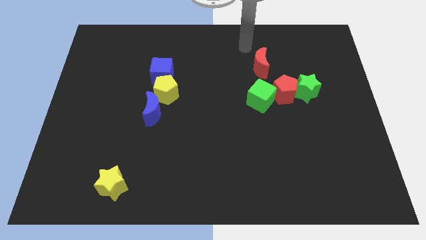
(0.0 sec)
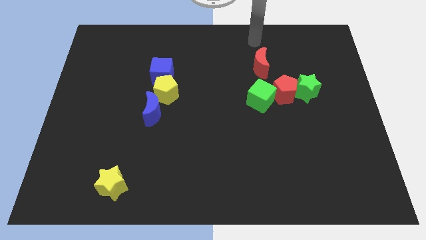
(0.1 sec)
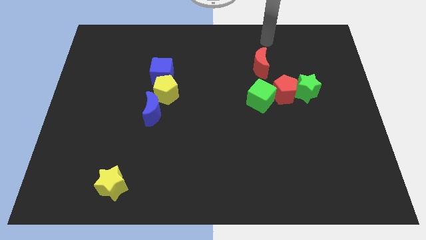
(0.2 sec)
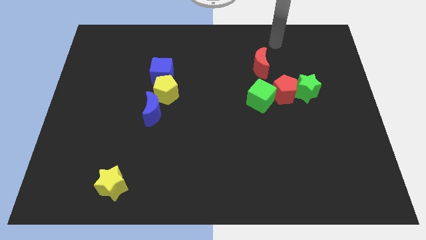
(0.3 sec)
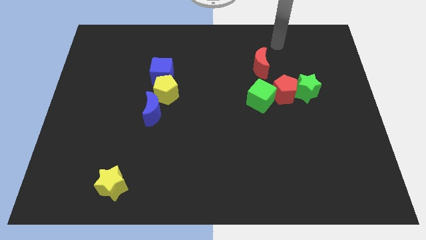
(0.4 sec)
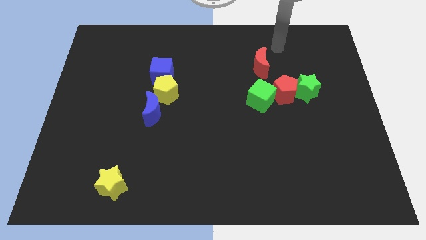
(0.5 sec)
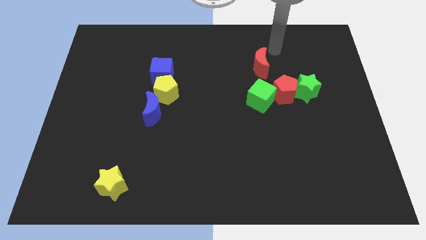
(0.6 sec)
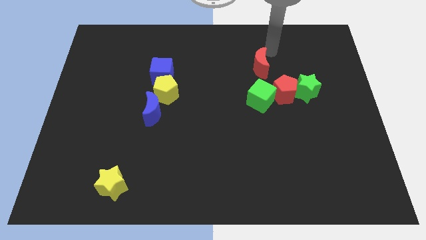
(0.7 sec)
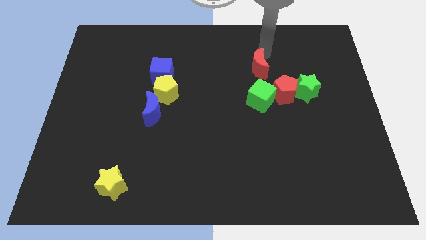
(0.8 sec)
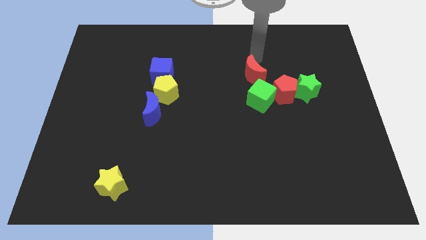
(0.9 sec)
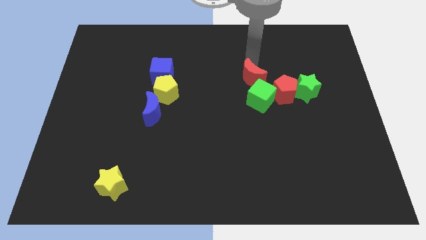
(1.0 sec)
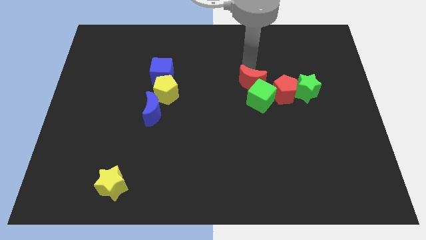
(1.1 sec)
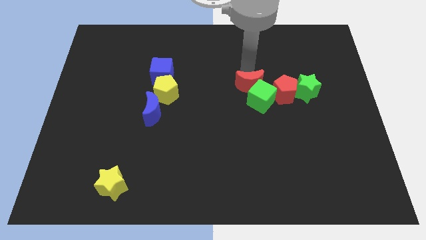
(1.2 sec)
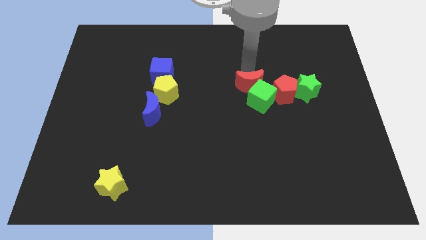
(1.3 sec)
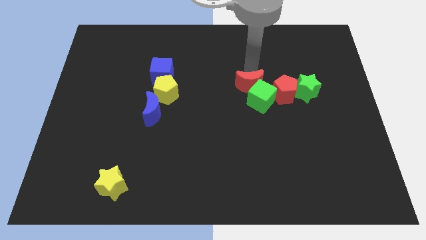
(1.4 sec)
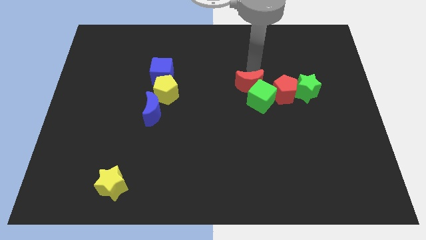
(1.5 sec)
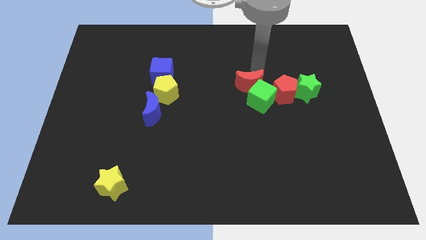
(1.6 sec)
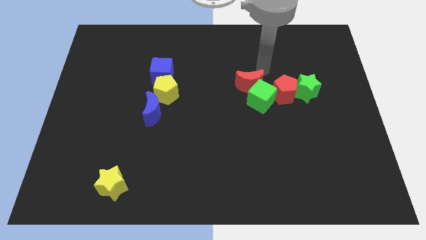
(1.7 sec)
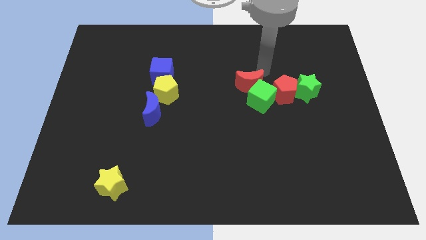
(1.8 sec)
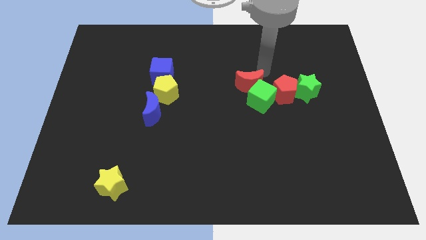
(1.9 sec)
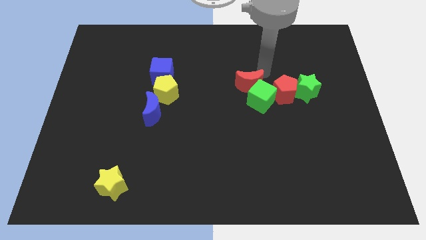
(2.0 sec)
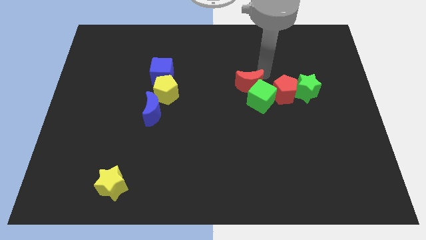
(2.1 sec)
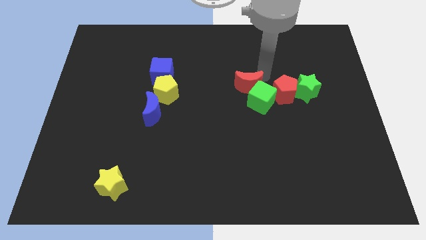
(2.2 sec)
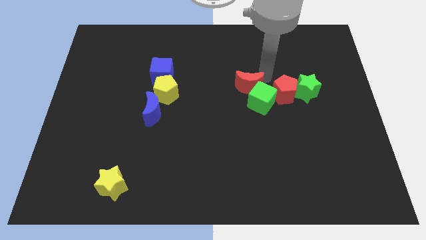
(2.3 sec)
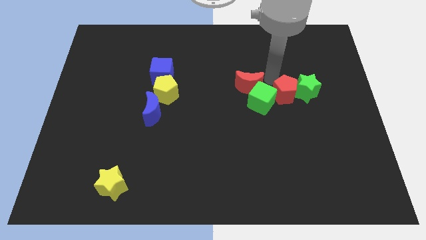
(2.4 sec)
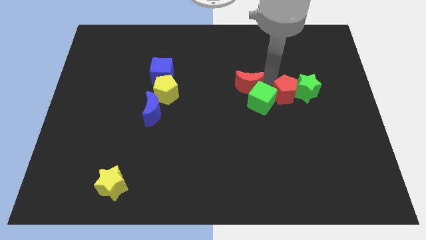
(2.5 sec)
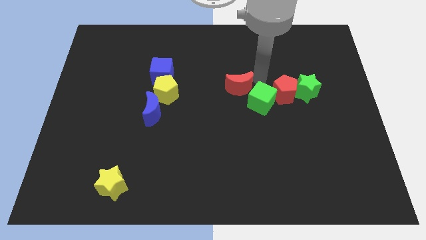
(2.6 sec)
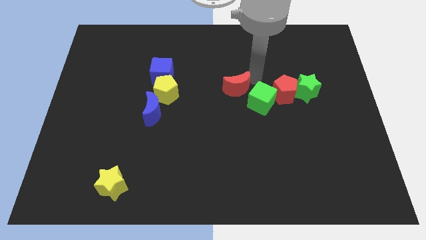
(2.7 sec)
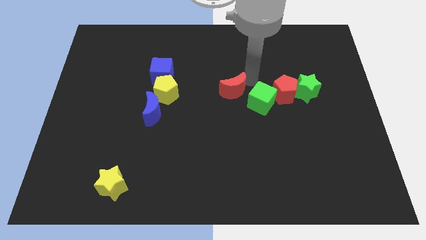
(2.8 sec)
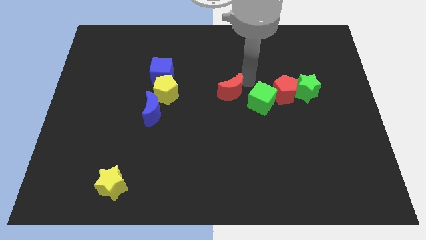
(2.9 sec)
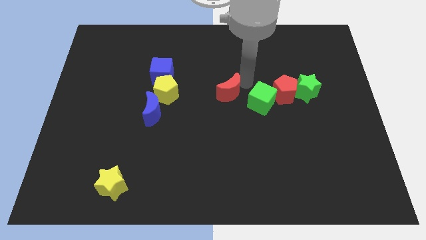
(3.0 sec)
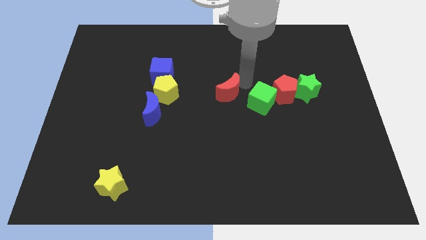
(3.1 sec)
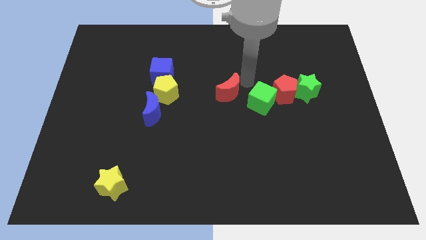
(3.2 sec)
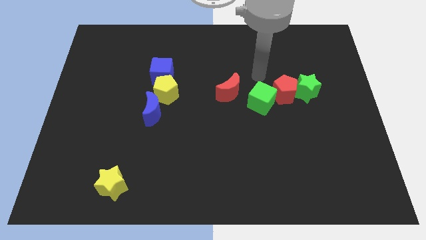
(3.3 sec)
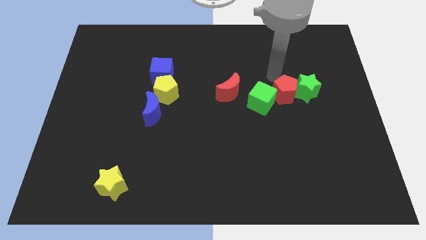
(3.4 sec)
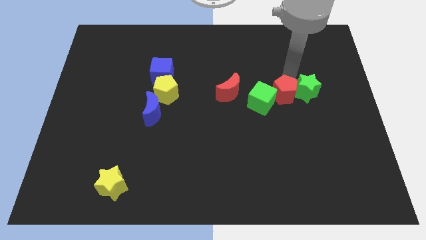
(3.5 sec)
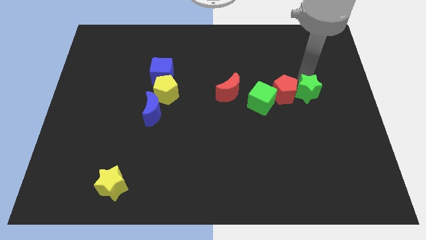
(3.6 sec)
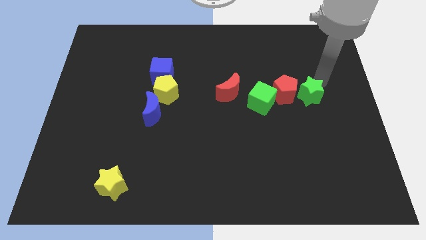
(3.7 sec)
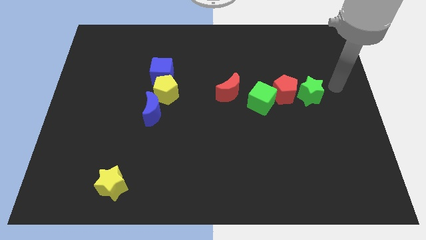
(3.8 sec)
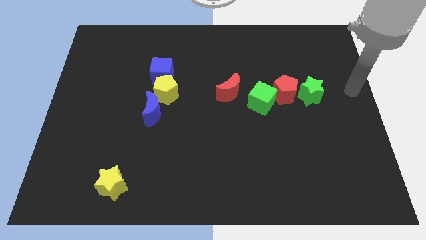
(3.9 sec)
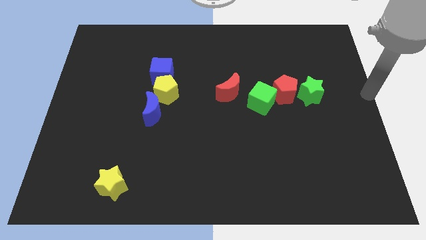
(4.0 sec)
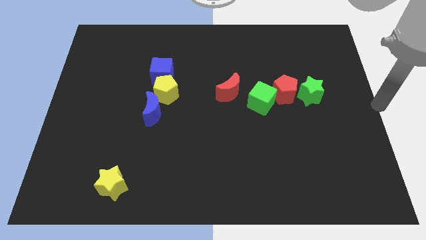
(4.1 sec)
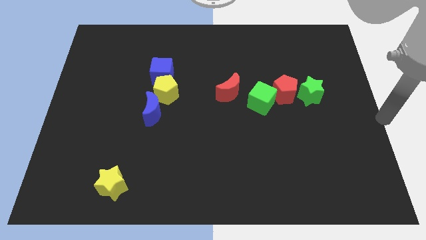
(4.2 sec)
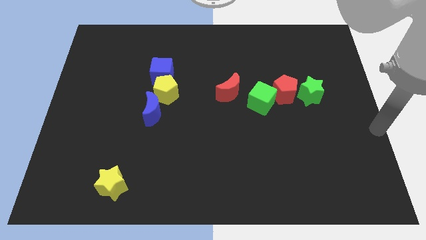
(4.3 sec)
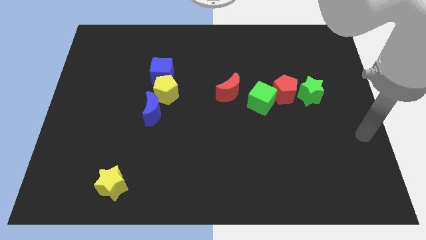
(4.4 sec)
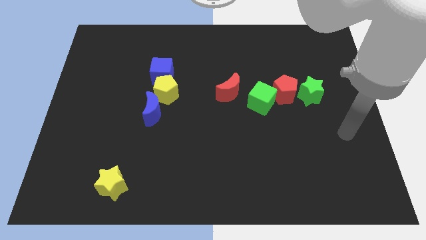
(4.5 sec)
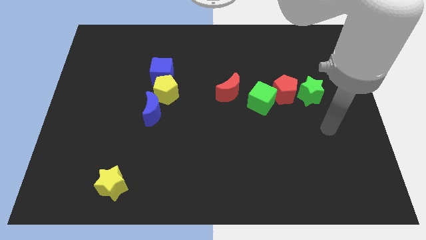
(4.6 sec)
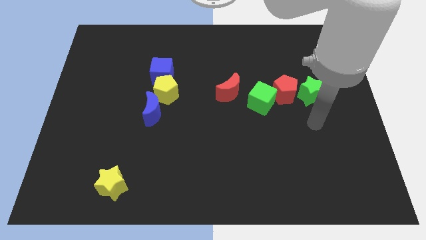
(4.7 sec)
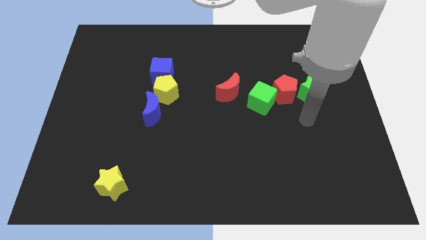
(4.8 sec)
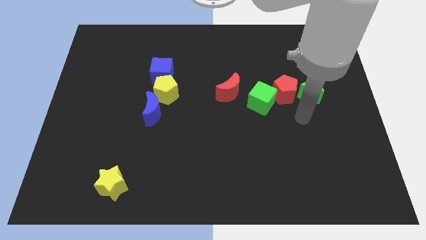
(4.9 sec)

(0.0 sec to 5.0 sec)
push the red crescent to the center of the board

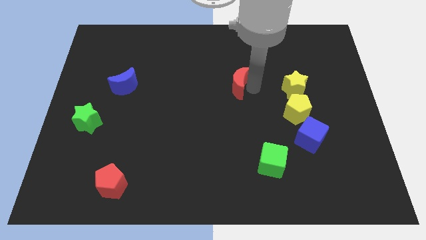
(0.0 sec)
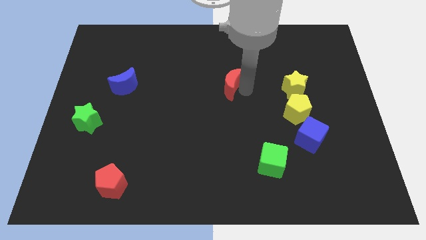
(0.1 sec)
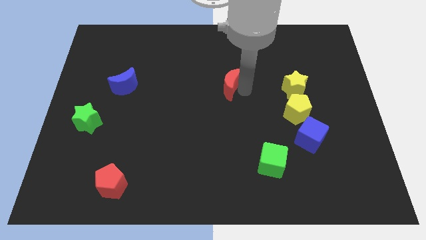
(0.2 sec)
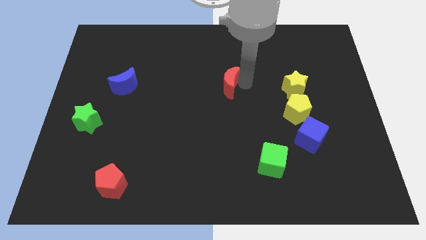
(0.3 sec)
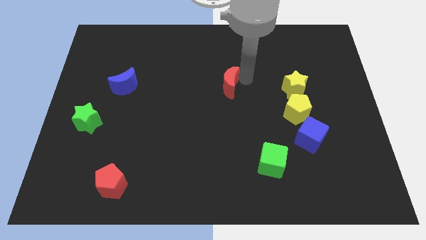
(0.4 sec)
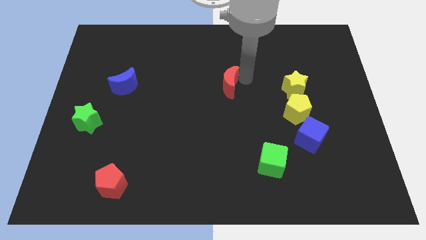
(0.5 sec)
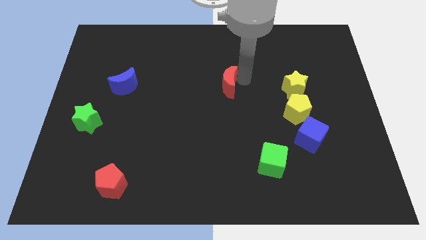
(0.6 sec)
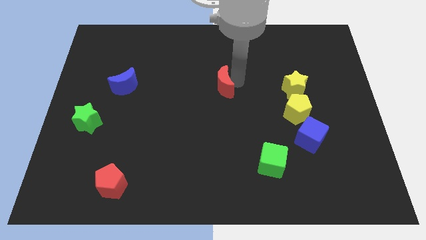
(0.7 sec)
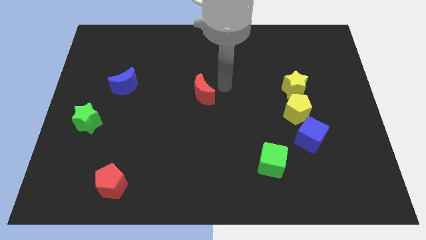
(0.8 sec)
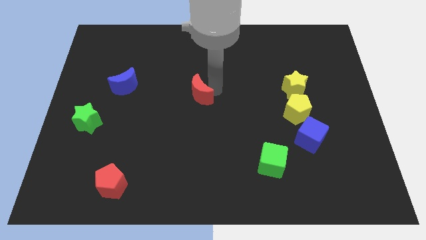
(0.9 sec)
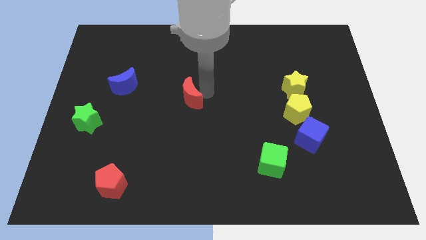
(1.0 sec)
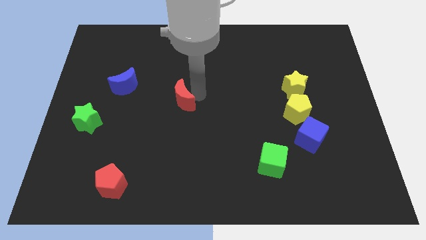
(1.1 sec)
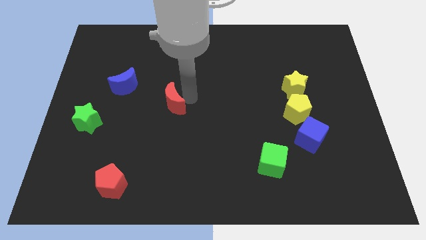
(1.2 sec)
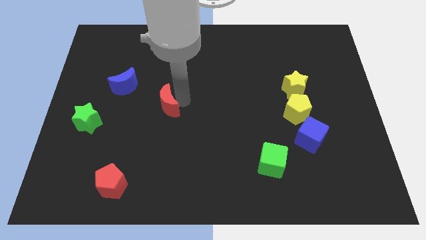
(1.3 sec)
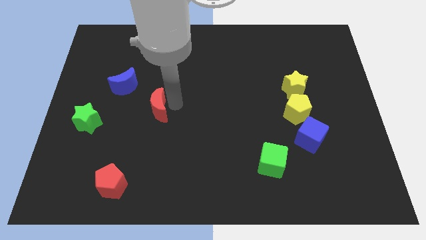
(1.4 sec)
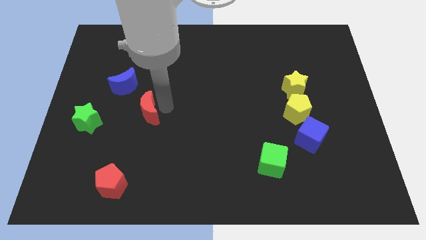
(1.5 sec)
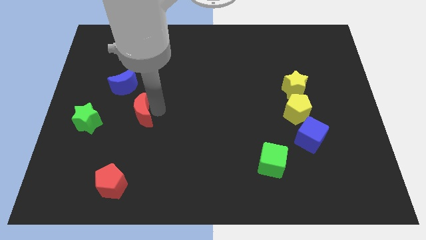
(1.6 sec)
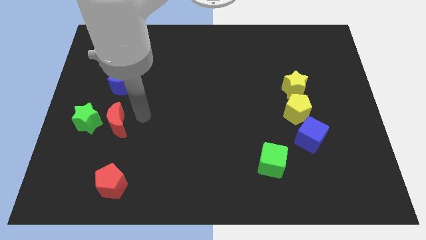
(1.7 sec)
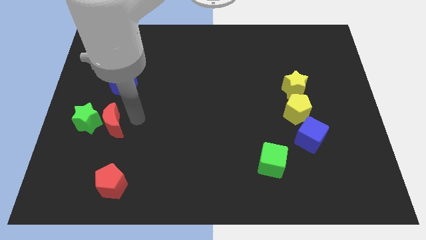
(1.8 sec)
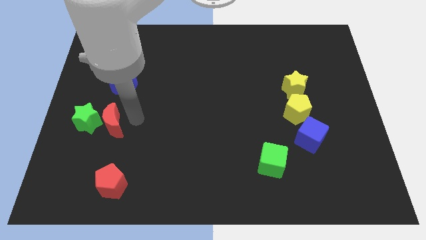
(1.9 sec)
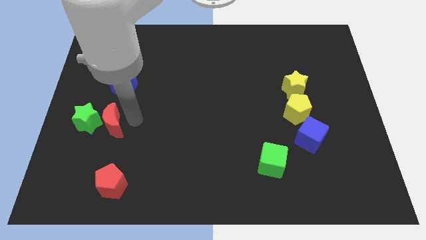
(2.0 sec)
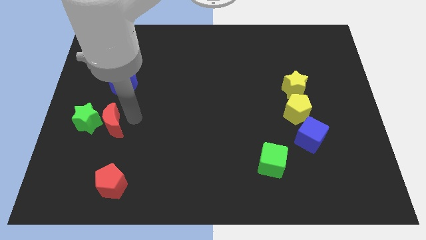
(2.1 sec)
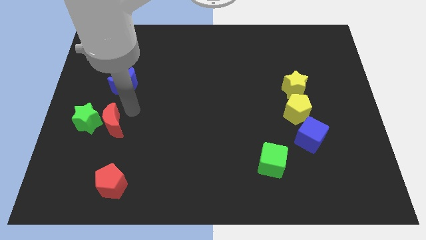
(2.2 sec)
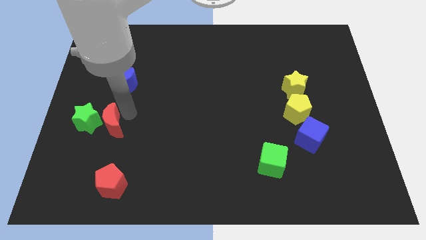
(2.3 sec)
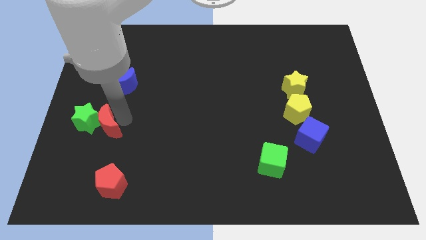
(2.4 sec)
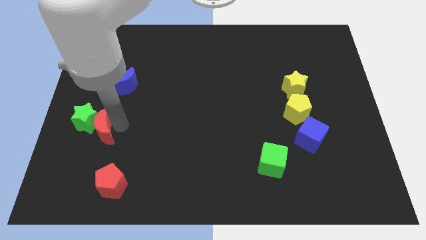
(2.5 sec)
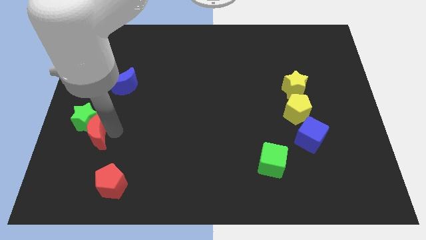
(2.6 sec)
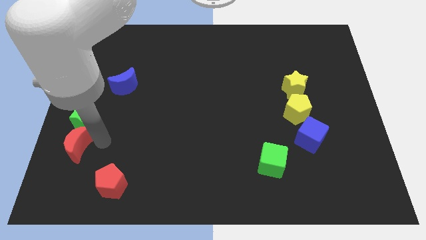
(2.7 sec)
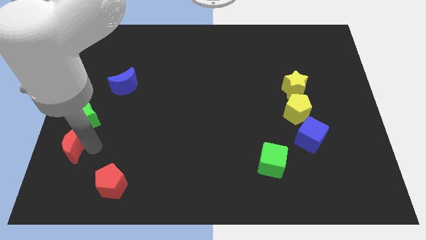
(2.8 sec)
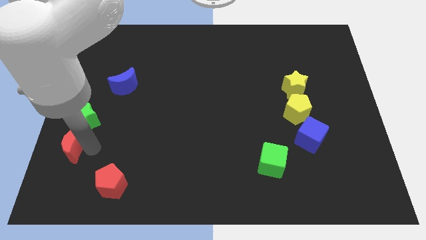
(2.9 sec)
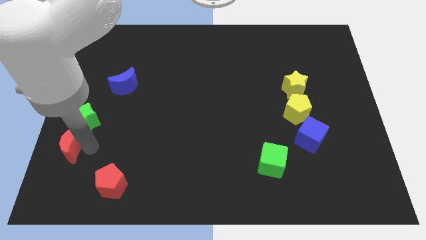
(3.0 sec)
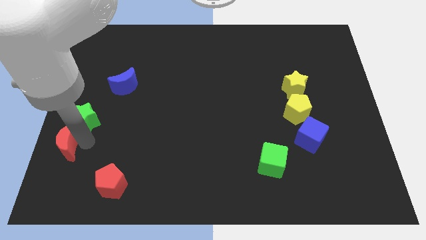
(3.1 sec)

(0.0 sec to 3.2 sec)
place red moon below green star

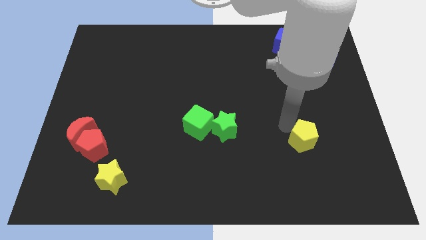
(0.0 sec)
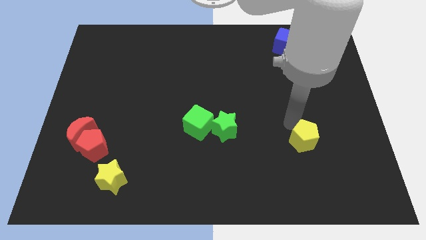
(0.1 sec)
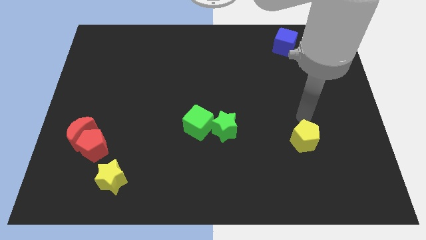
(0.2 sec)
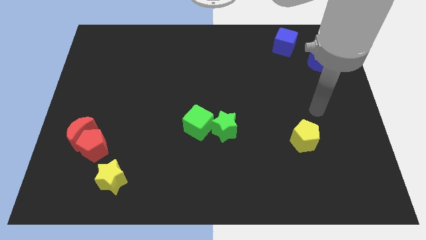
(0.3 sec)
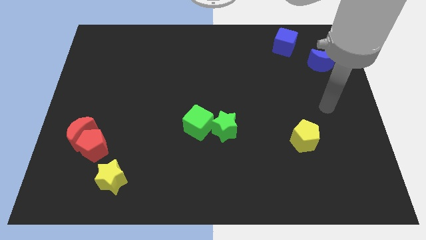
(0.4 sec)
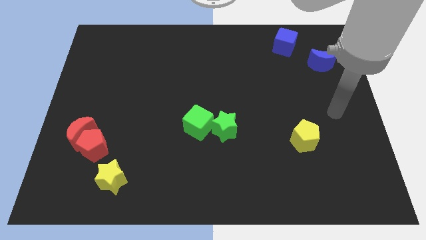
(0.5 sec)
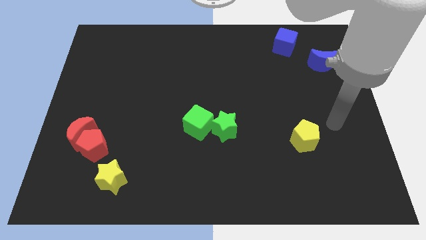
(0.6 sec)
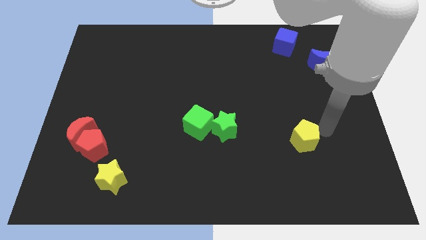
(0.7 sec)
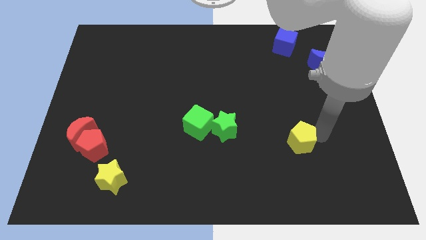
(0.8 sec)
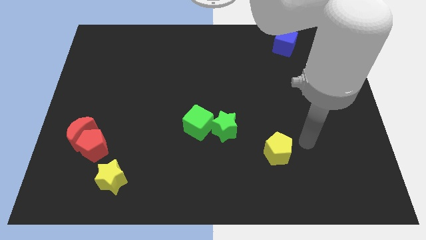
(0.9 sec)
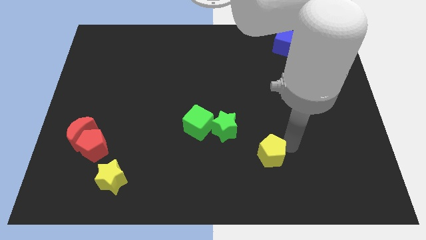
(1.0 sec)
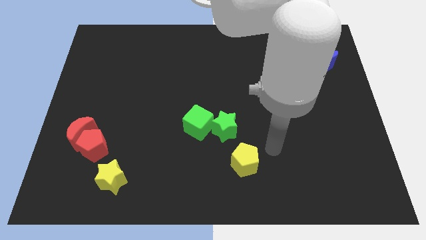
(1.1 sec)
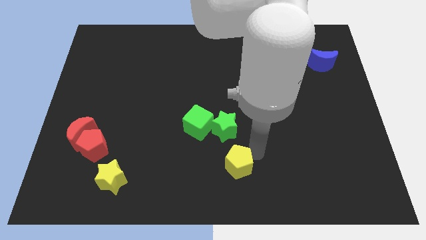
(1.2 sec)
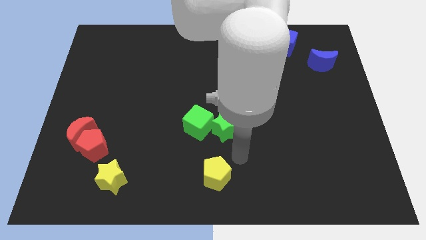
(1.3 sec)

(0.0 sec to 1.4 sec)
place the yellow pentagon under the green star
